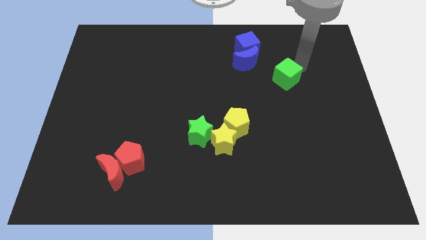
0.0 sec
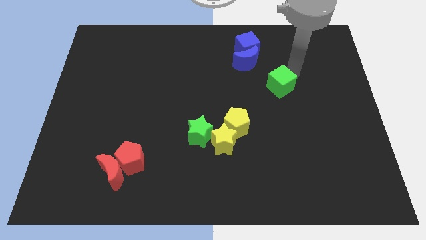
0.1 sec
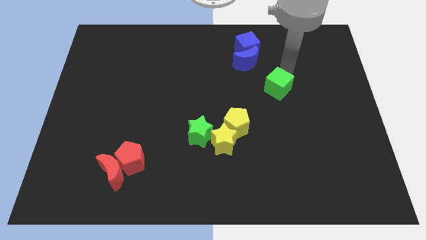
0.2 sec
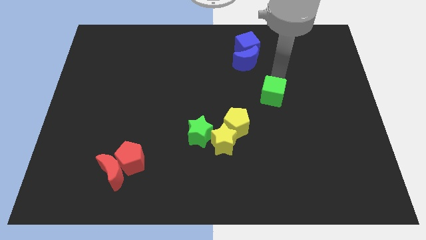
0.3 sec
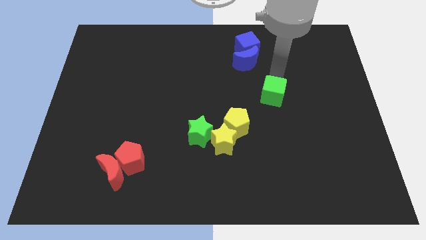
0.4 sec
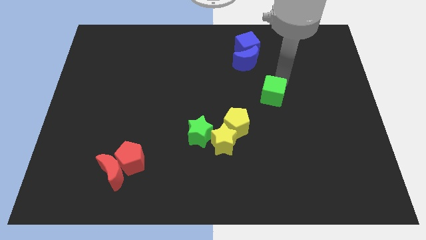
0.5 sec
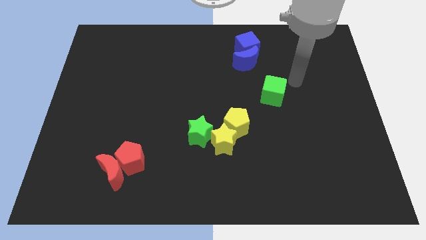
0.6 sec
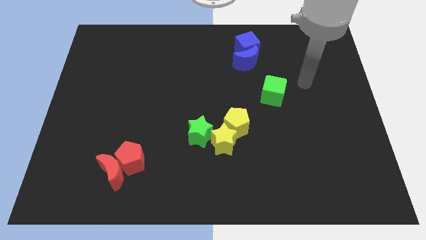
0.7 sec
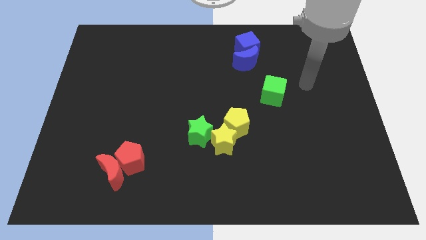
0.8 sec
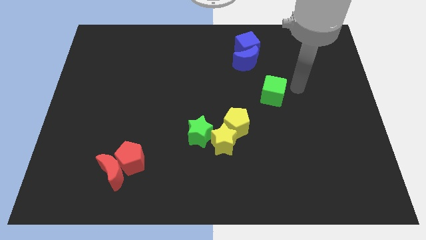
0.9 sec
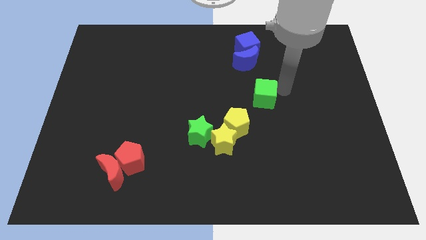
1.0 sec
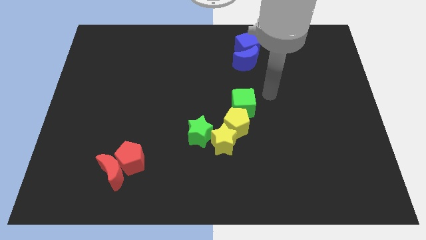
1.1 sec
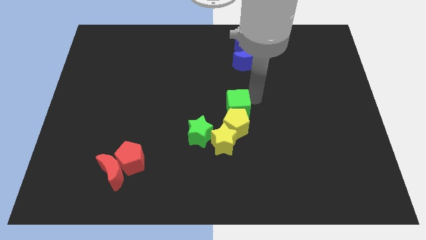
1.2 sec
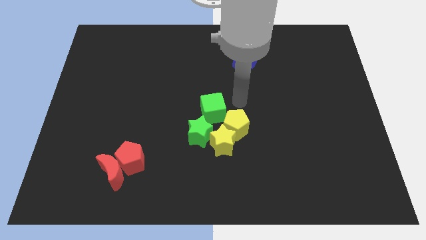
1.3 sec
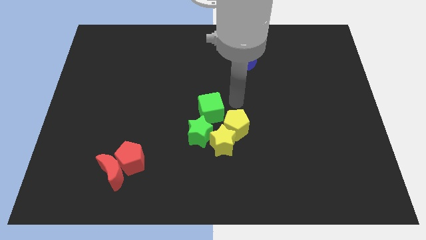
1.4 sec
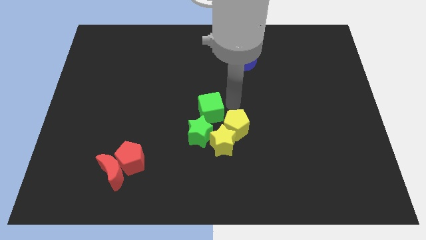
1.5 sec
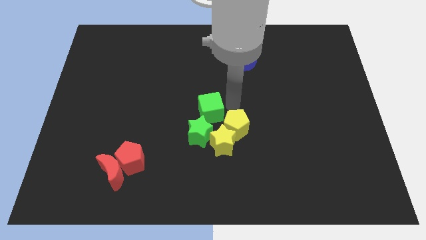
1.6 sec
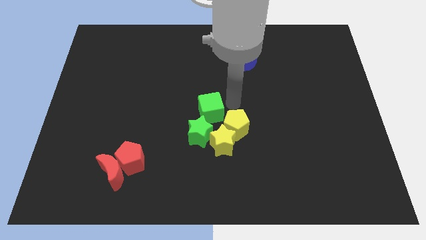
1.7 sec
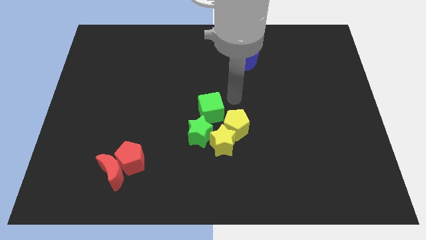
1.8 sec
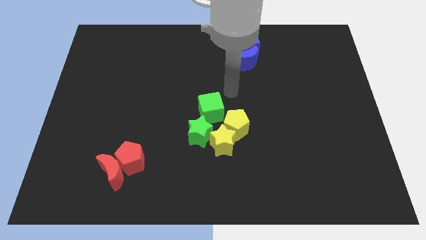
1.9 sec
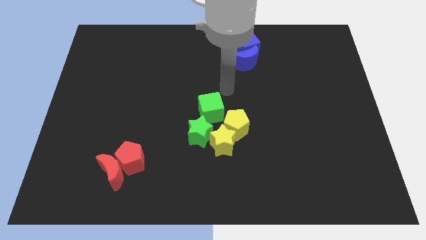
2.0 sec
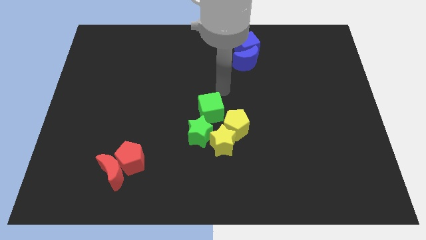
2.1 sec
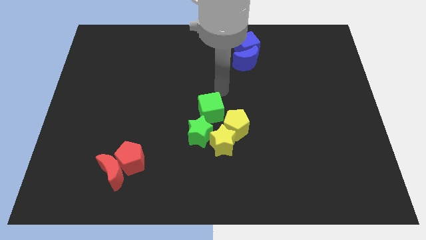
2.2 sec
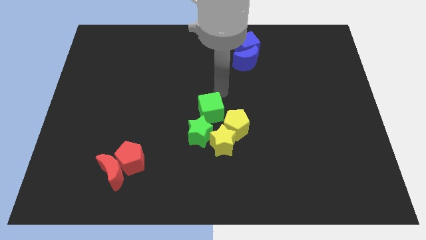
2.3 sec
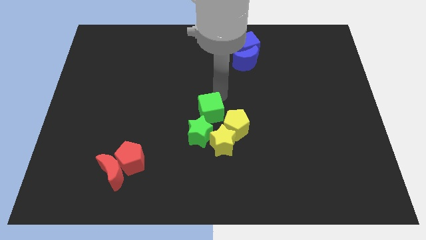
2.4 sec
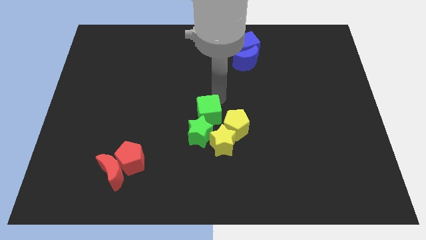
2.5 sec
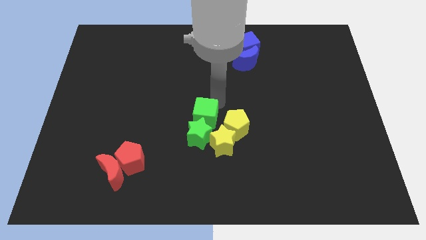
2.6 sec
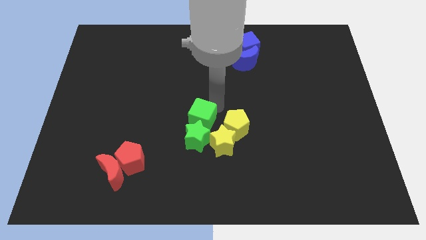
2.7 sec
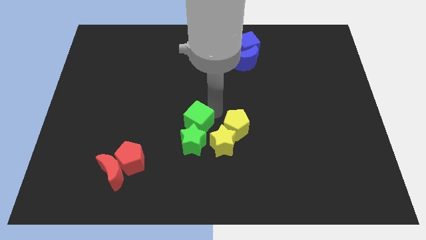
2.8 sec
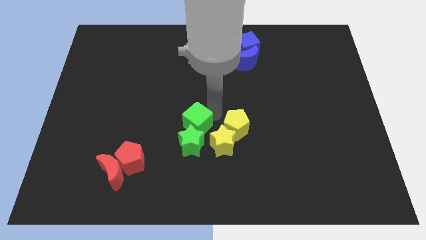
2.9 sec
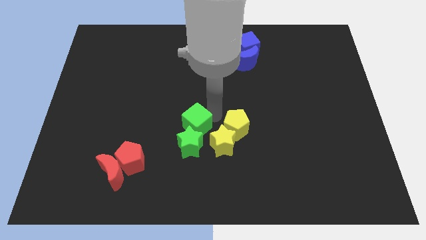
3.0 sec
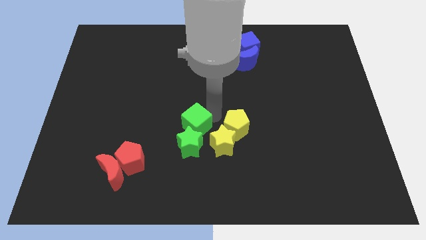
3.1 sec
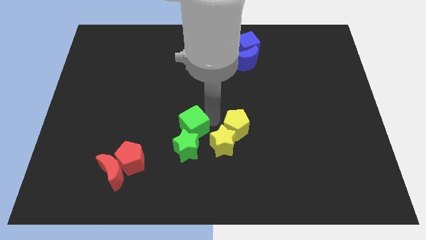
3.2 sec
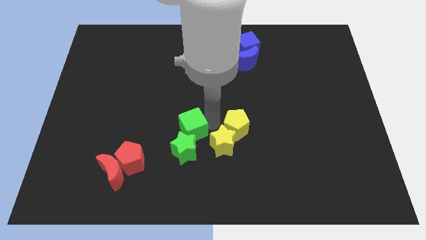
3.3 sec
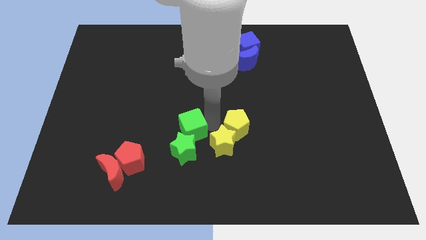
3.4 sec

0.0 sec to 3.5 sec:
push the green cube into the top side of the green star

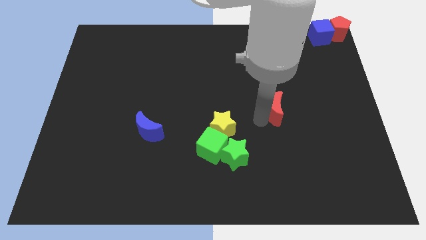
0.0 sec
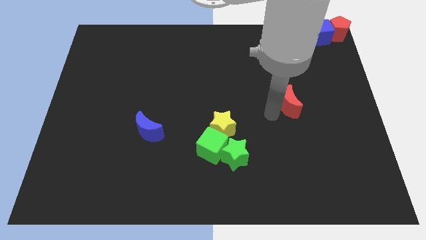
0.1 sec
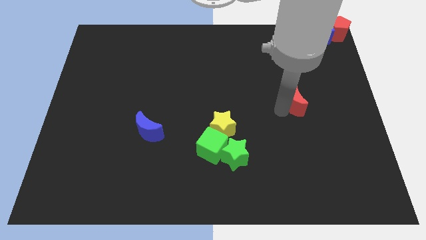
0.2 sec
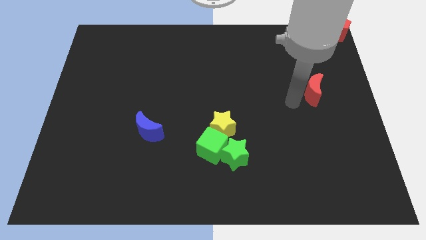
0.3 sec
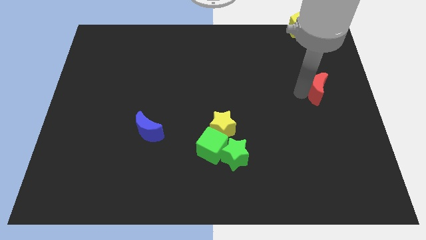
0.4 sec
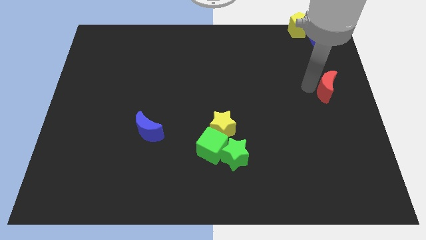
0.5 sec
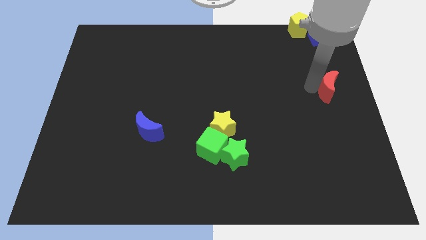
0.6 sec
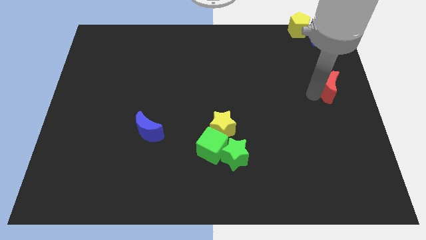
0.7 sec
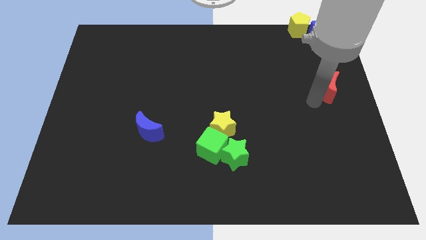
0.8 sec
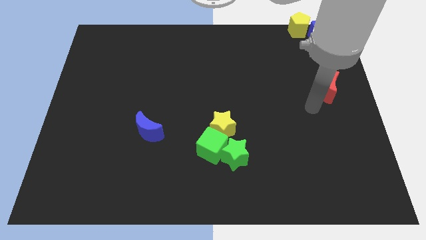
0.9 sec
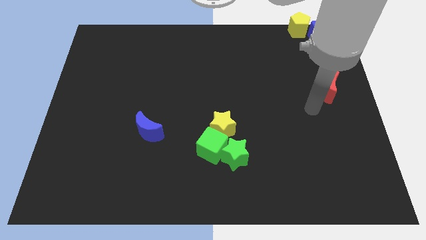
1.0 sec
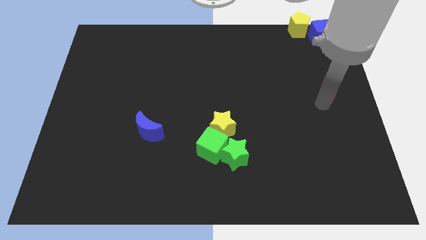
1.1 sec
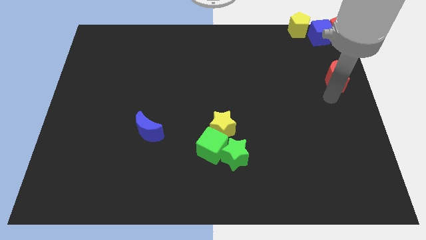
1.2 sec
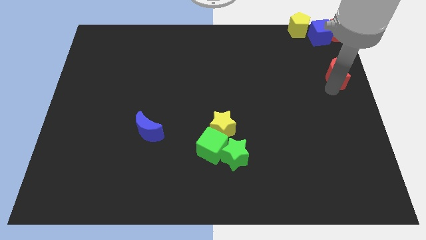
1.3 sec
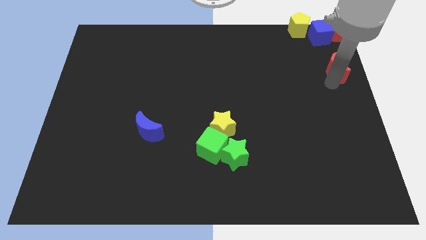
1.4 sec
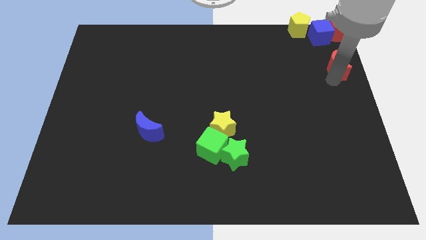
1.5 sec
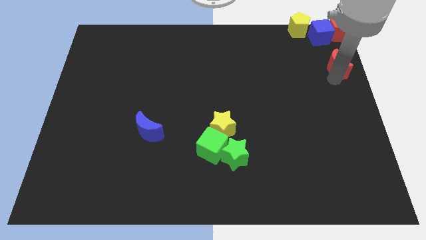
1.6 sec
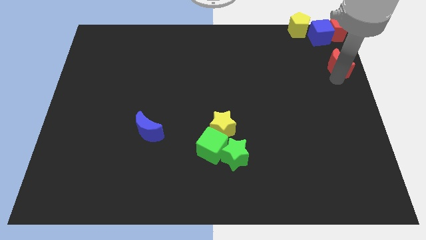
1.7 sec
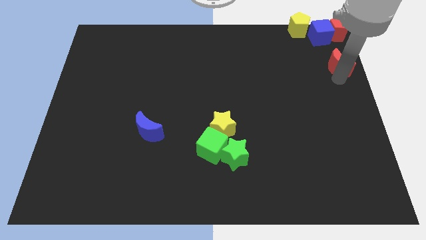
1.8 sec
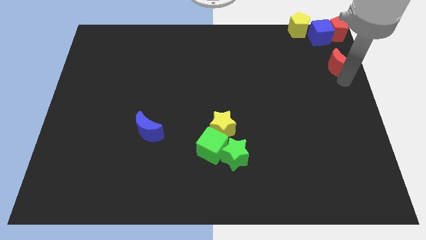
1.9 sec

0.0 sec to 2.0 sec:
move red crescent towards right of the board

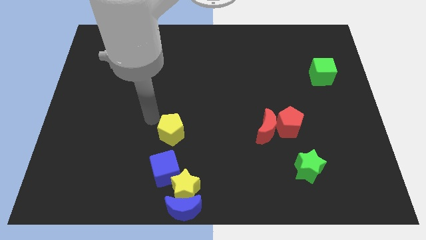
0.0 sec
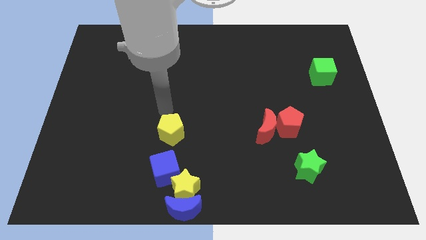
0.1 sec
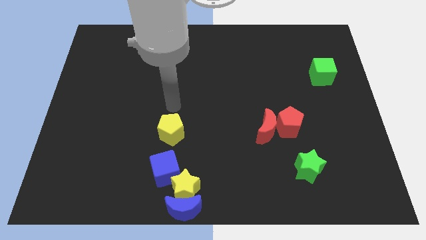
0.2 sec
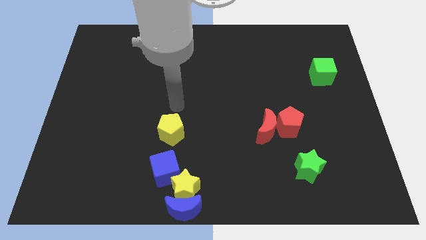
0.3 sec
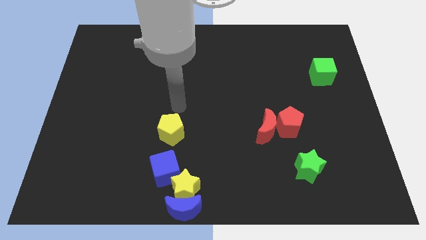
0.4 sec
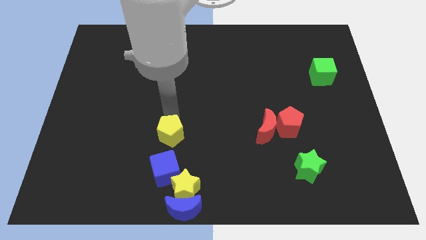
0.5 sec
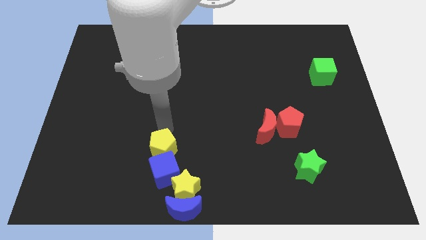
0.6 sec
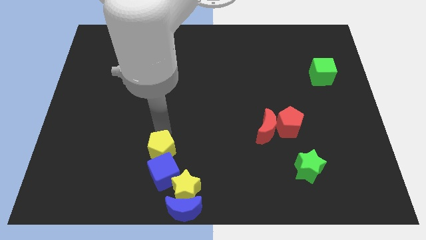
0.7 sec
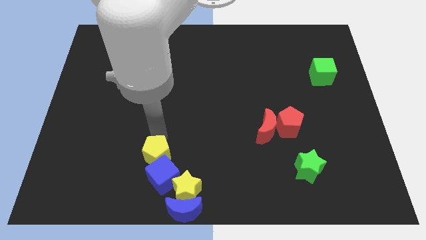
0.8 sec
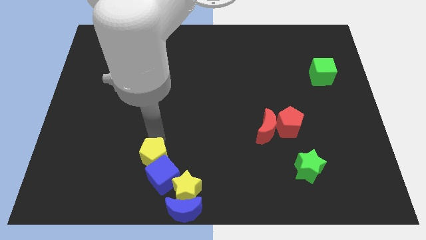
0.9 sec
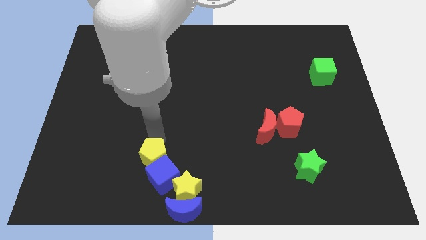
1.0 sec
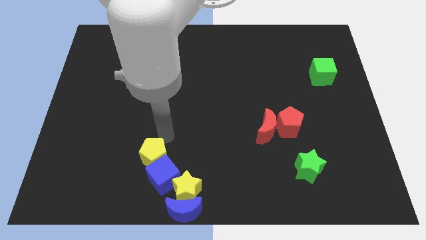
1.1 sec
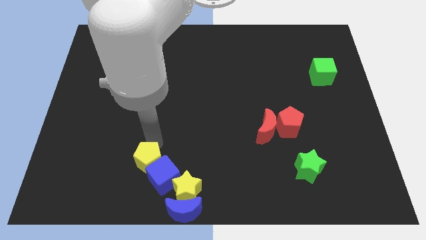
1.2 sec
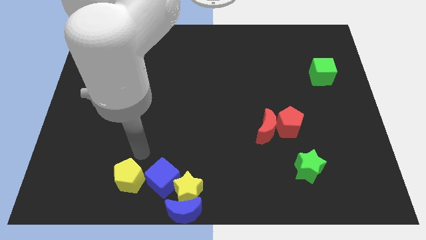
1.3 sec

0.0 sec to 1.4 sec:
push the yellow pentagon into the blue cube

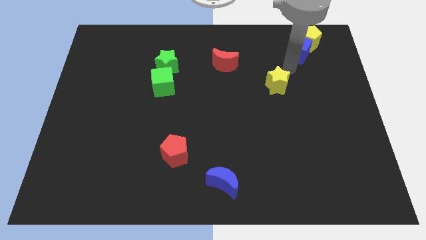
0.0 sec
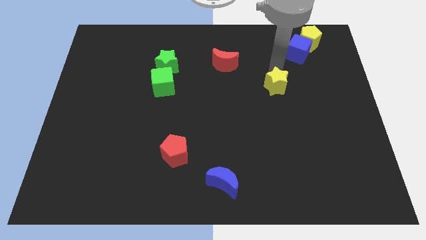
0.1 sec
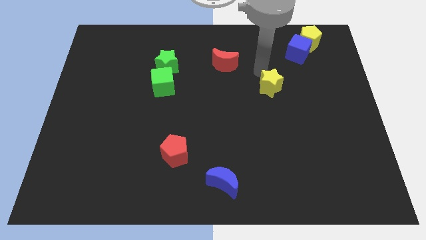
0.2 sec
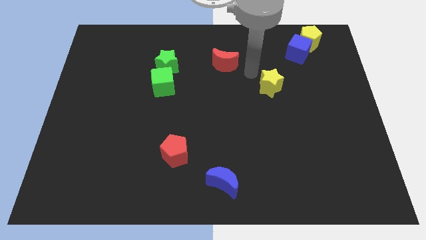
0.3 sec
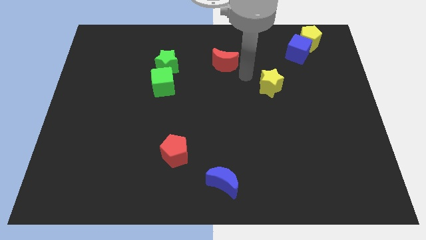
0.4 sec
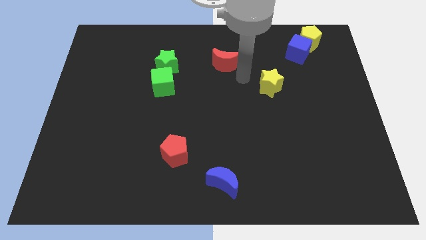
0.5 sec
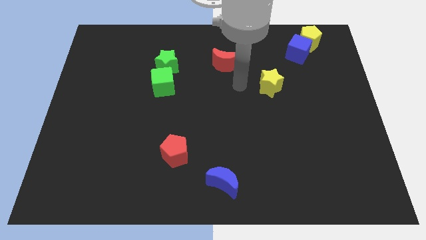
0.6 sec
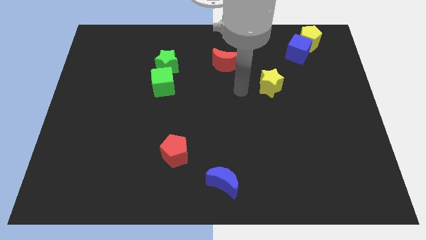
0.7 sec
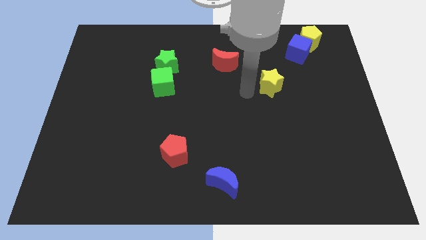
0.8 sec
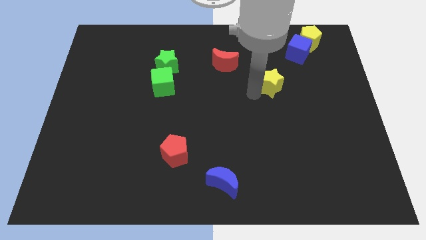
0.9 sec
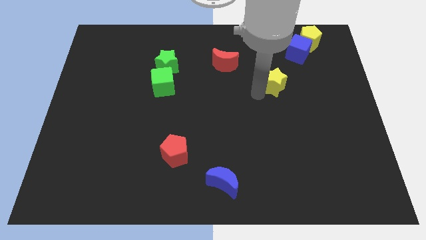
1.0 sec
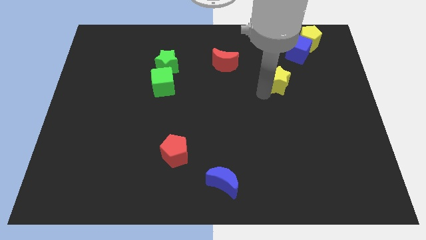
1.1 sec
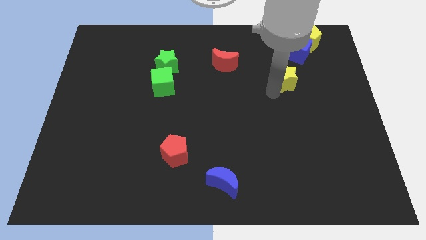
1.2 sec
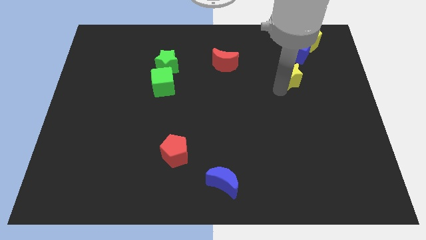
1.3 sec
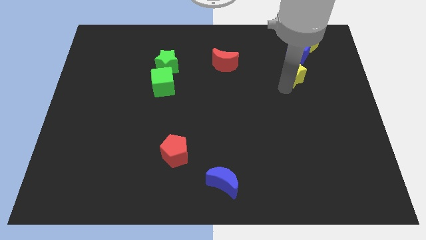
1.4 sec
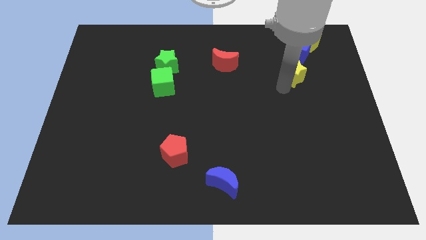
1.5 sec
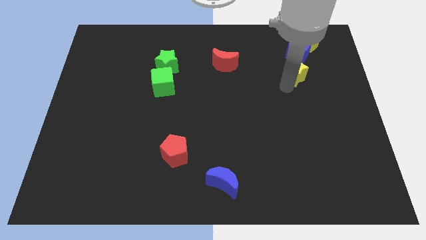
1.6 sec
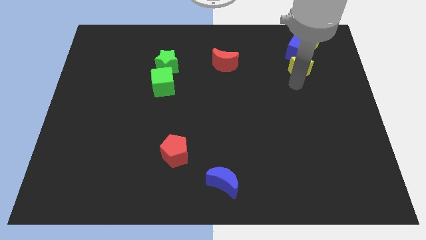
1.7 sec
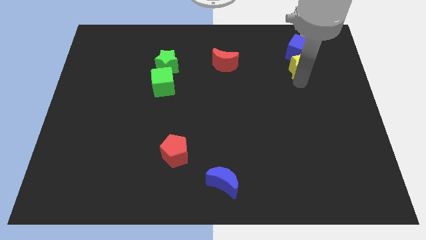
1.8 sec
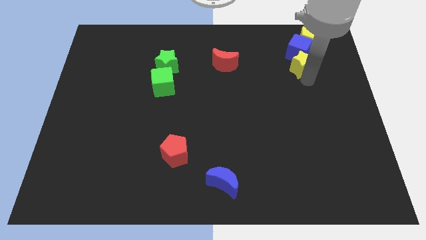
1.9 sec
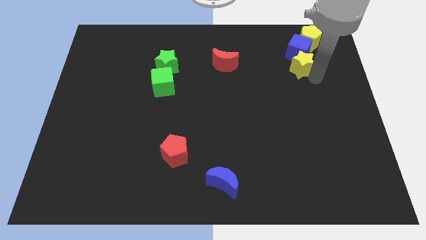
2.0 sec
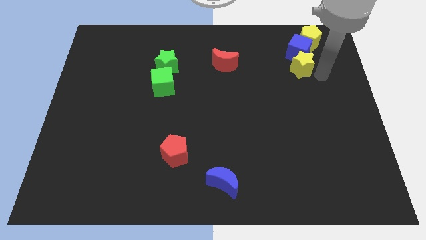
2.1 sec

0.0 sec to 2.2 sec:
push the yellow star into the blue cube
